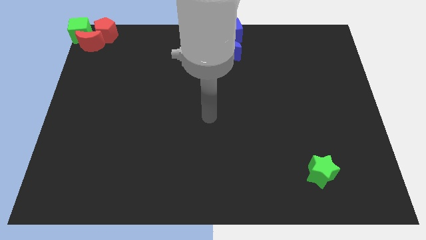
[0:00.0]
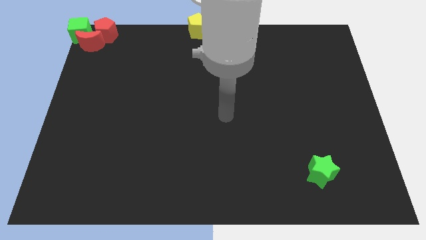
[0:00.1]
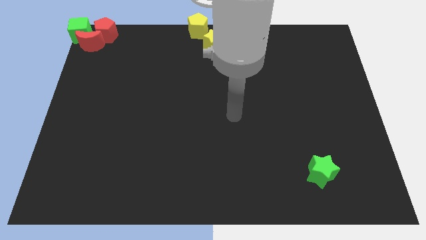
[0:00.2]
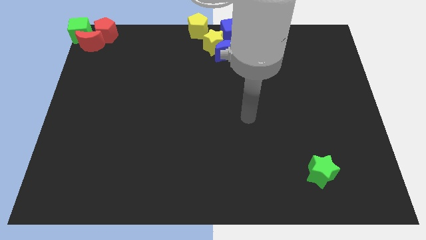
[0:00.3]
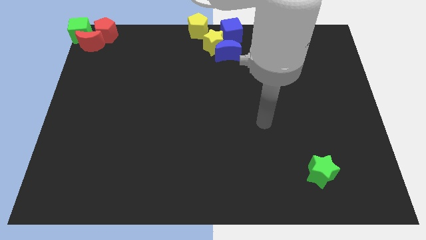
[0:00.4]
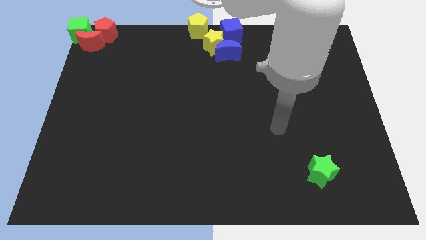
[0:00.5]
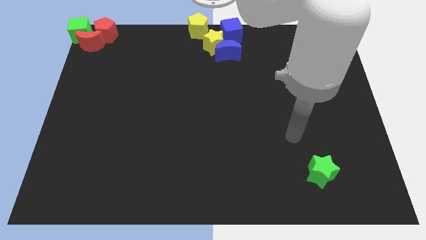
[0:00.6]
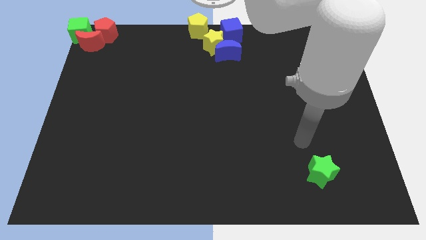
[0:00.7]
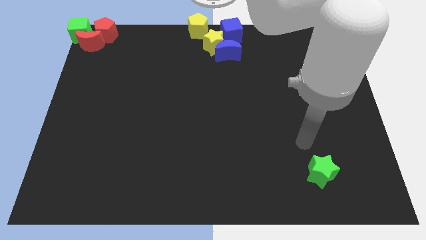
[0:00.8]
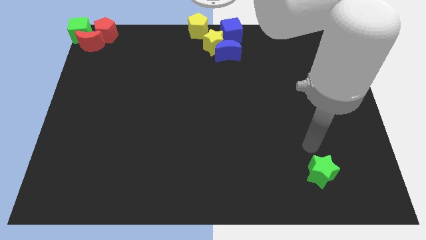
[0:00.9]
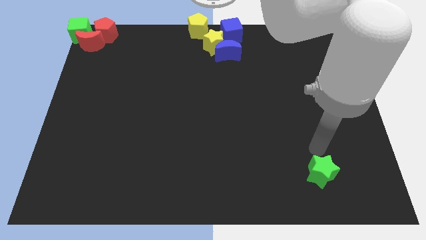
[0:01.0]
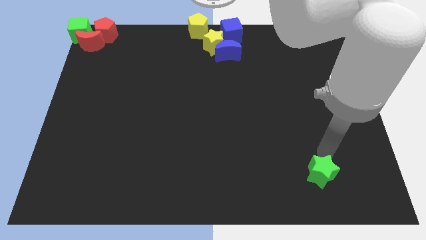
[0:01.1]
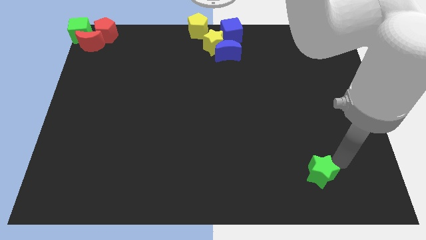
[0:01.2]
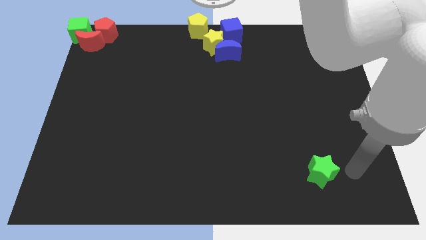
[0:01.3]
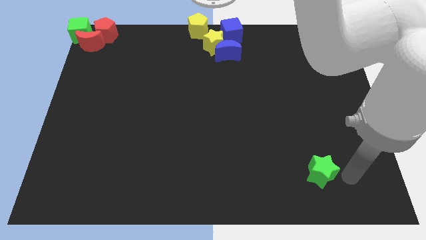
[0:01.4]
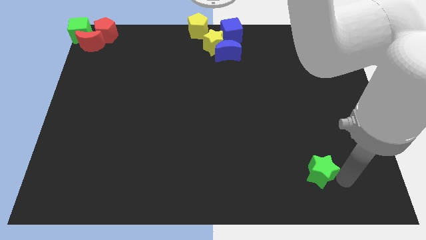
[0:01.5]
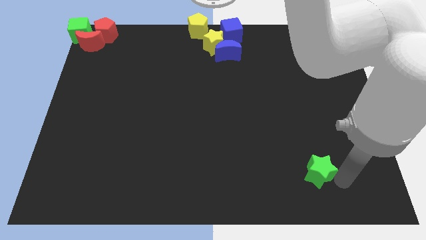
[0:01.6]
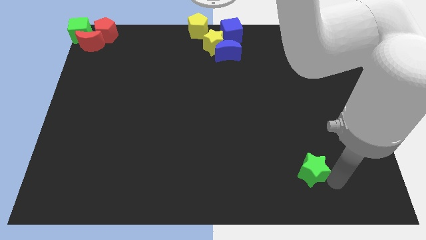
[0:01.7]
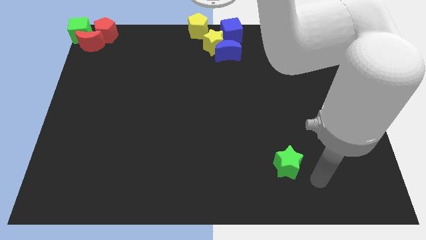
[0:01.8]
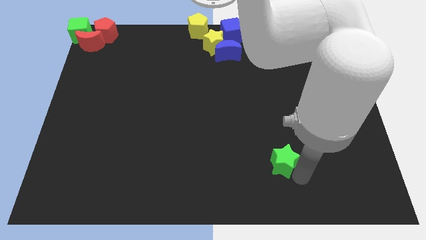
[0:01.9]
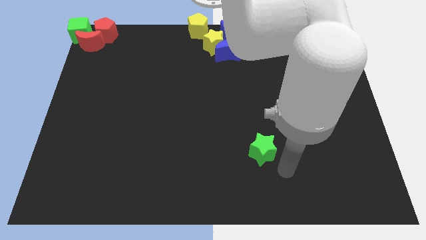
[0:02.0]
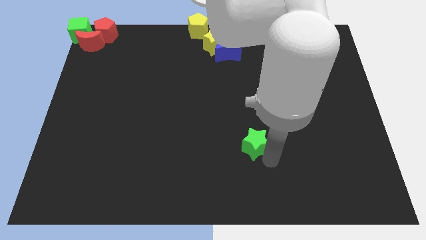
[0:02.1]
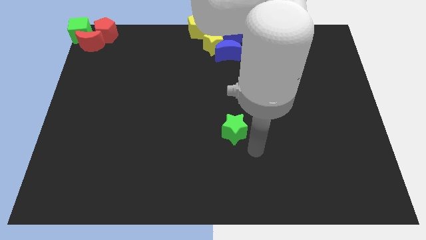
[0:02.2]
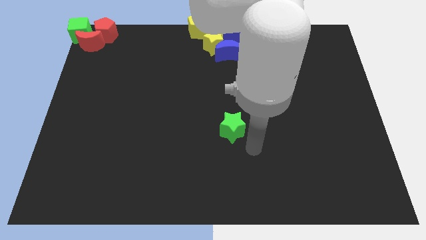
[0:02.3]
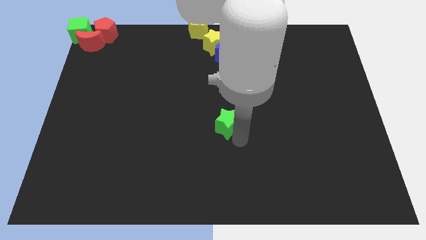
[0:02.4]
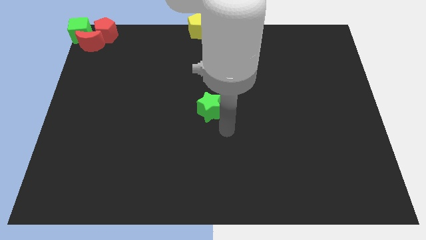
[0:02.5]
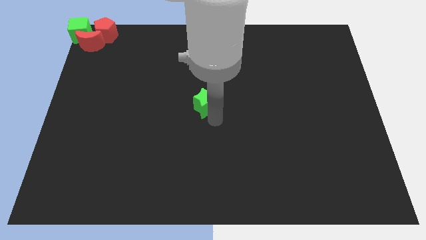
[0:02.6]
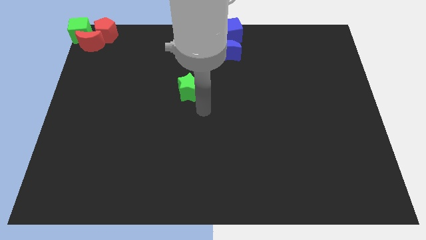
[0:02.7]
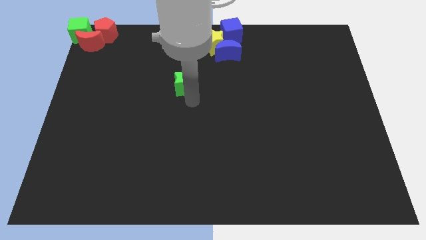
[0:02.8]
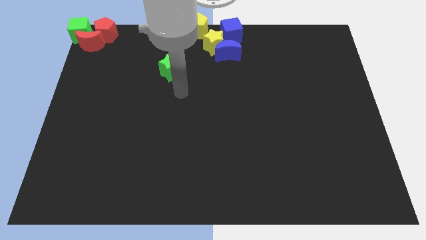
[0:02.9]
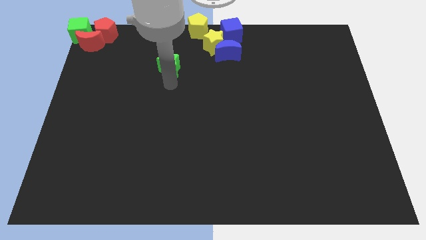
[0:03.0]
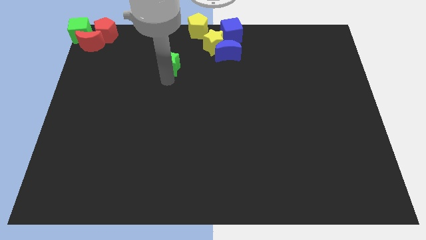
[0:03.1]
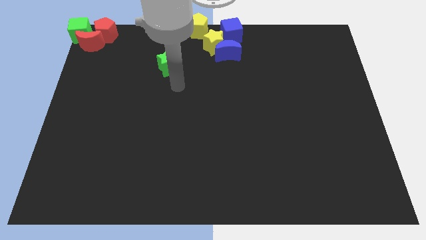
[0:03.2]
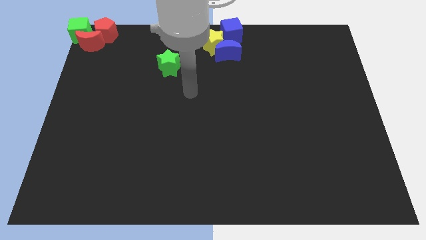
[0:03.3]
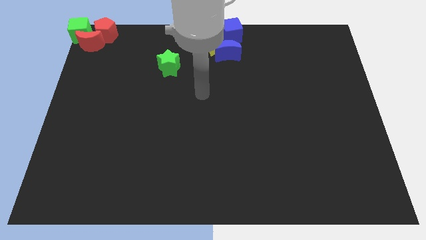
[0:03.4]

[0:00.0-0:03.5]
push green star diagonally bottom left of the yellow star

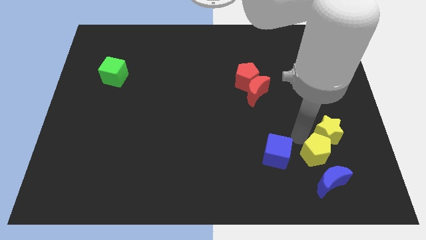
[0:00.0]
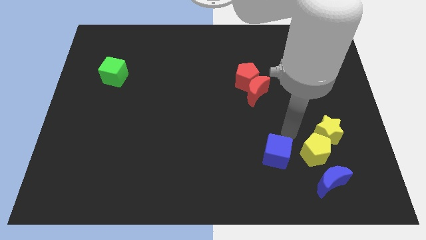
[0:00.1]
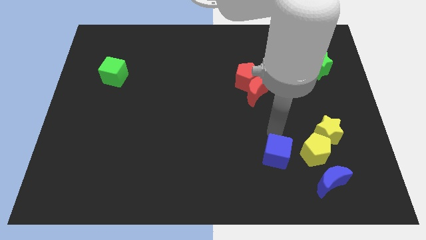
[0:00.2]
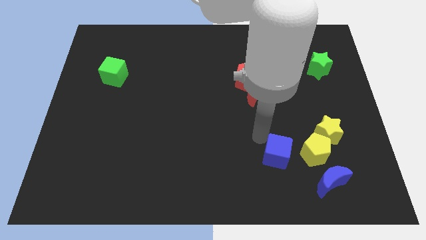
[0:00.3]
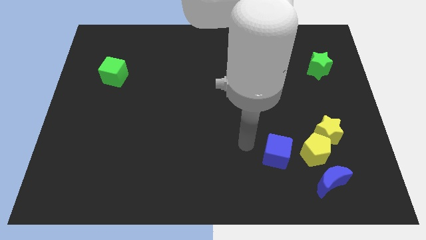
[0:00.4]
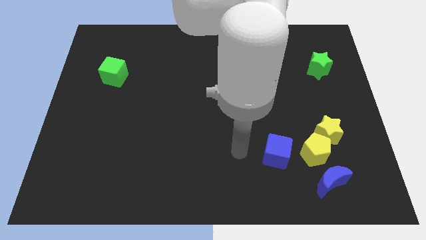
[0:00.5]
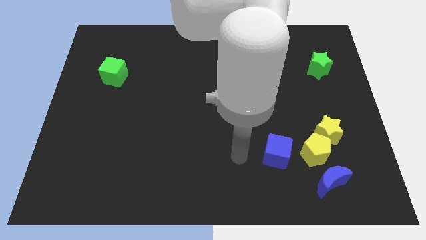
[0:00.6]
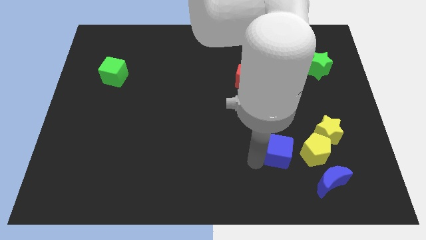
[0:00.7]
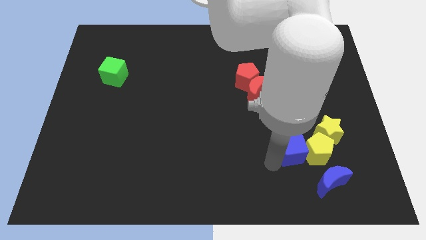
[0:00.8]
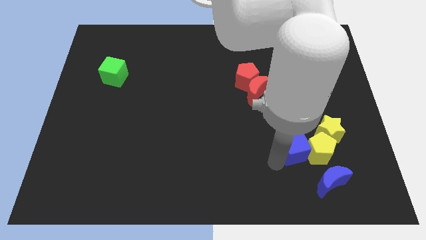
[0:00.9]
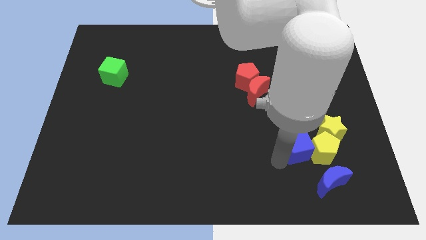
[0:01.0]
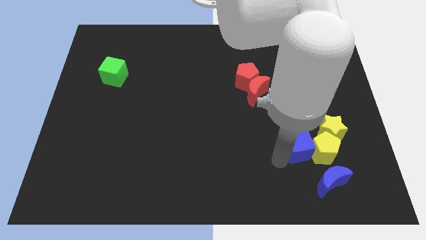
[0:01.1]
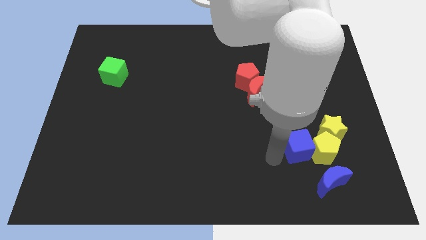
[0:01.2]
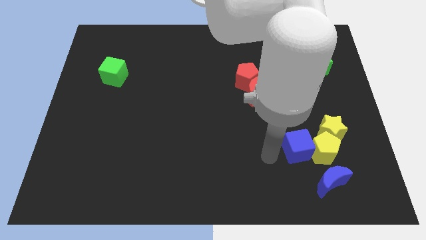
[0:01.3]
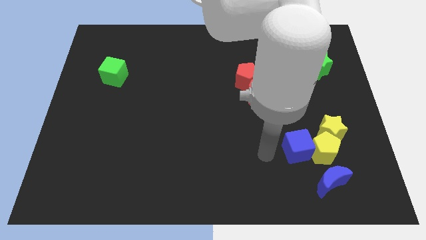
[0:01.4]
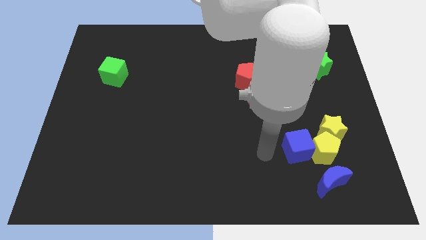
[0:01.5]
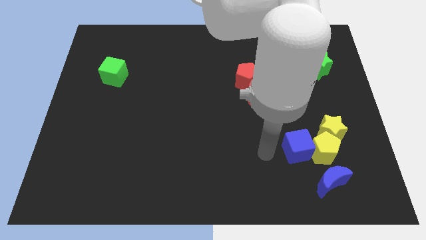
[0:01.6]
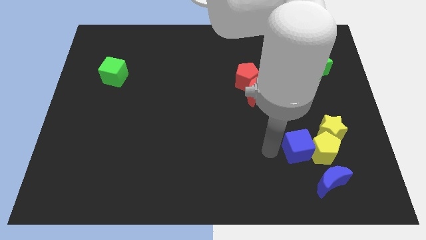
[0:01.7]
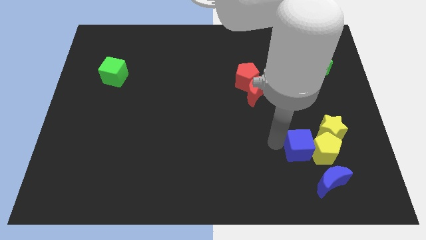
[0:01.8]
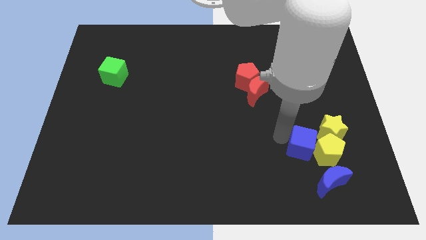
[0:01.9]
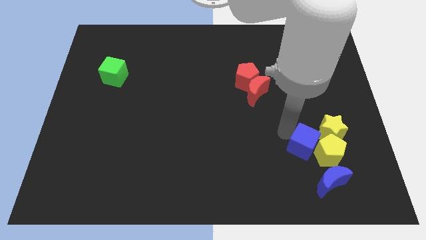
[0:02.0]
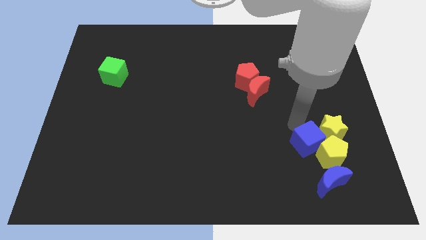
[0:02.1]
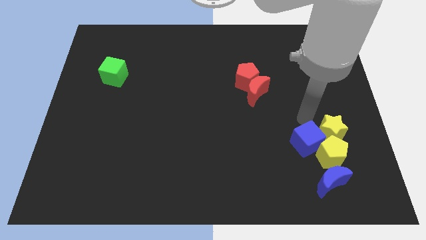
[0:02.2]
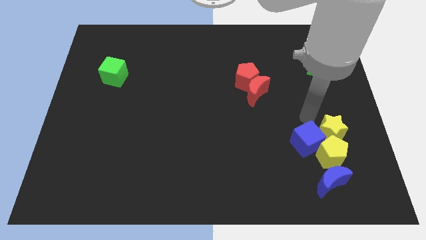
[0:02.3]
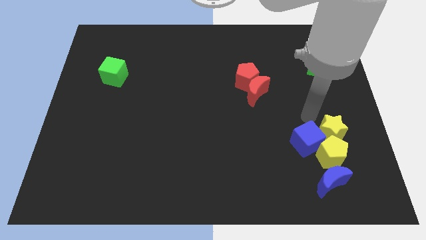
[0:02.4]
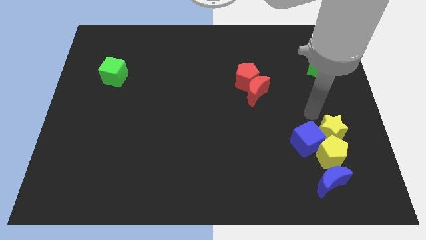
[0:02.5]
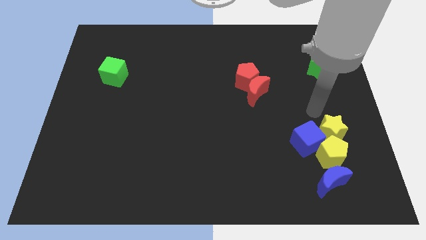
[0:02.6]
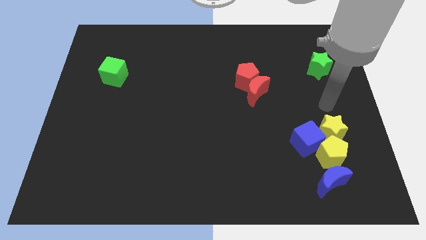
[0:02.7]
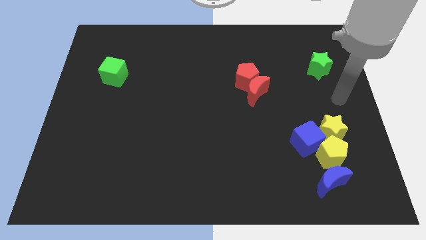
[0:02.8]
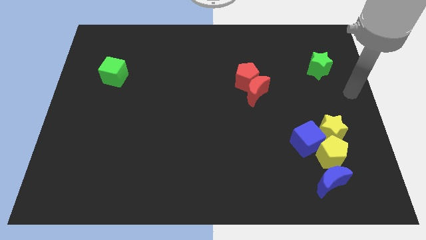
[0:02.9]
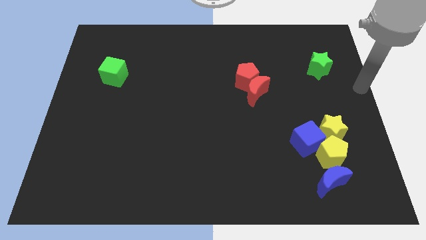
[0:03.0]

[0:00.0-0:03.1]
move blue cube into yellow blocks

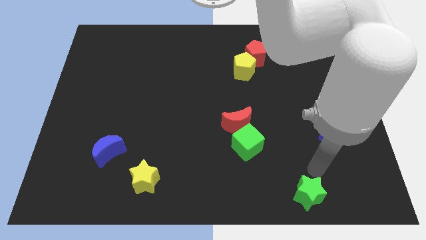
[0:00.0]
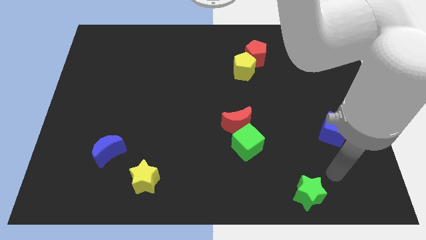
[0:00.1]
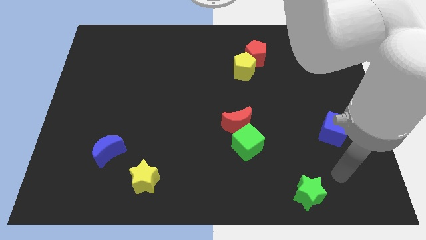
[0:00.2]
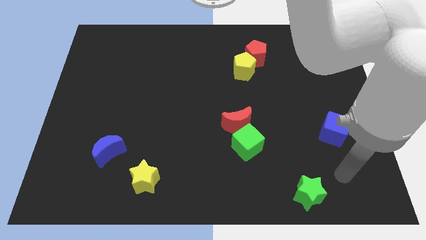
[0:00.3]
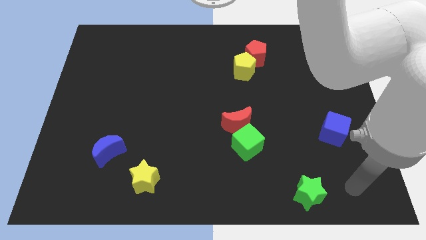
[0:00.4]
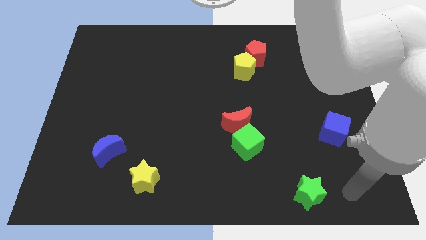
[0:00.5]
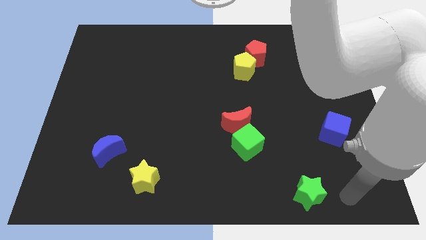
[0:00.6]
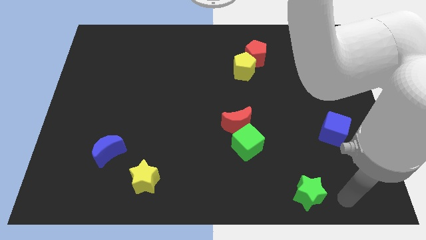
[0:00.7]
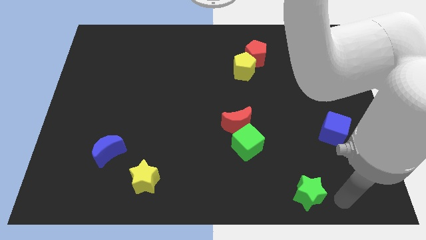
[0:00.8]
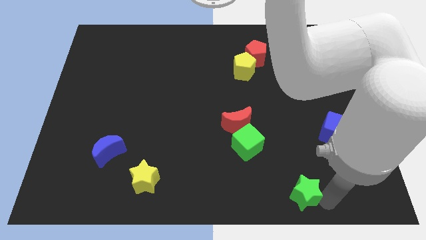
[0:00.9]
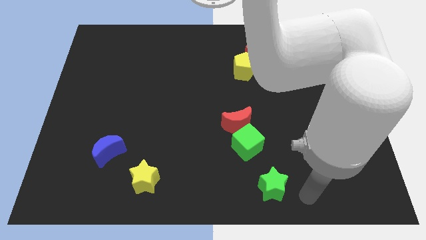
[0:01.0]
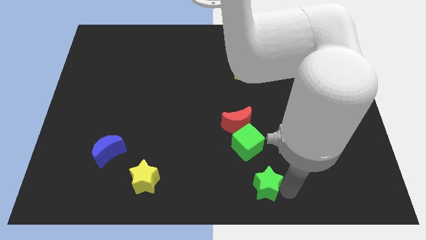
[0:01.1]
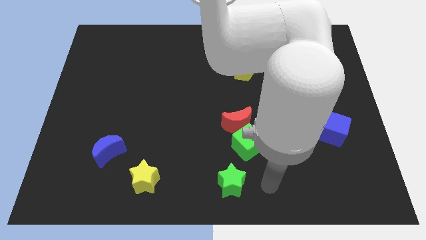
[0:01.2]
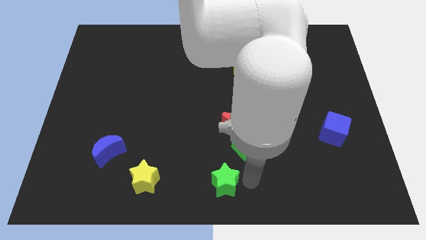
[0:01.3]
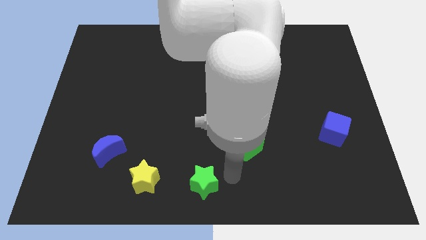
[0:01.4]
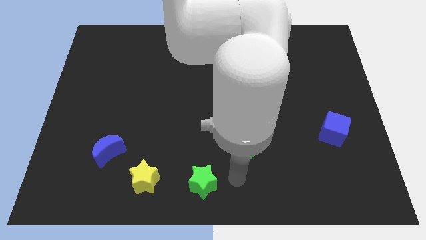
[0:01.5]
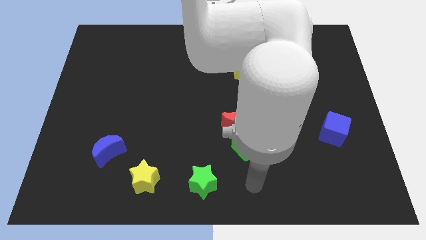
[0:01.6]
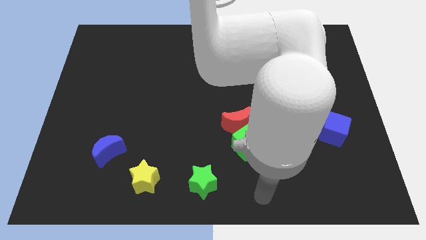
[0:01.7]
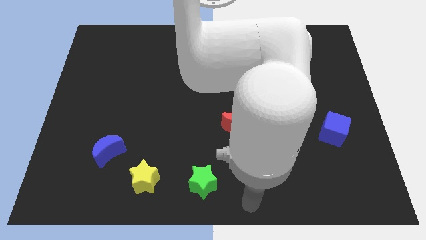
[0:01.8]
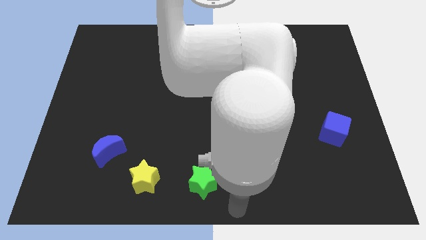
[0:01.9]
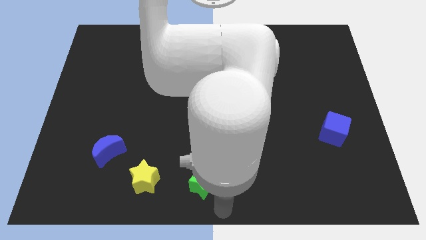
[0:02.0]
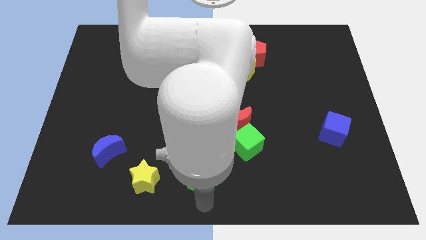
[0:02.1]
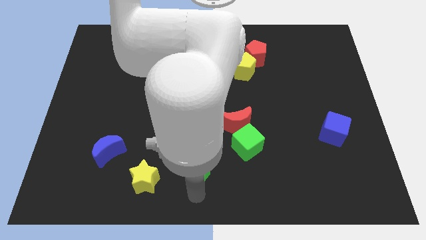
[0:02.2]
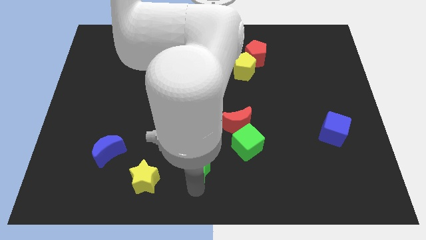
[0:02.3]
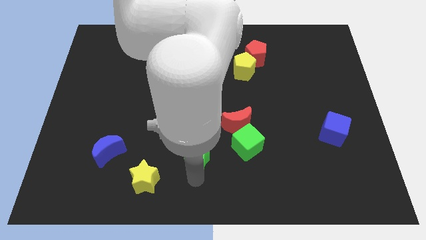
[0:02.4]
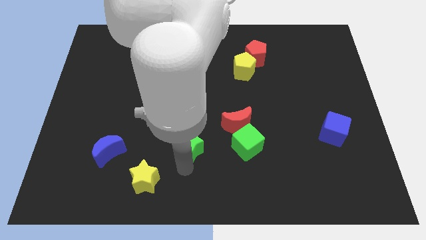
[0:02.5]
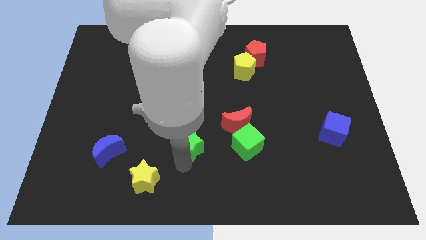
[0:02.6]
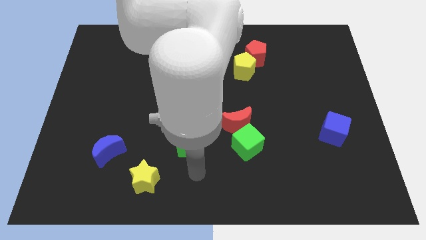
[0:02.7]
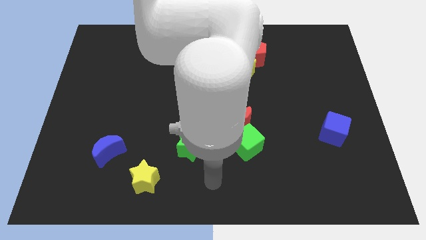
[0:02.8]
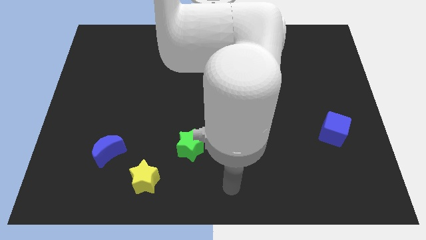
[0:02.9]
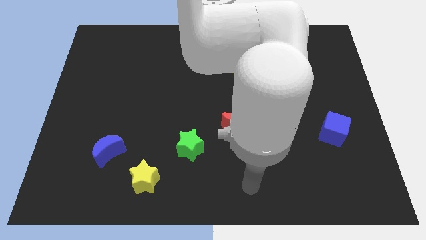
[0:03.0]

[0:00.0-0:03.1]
push the green star horizontally to the right side of the blue moon
